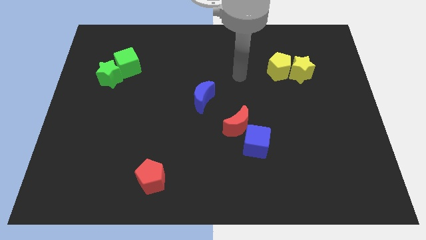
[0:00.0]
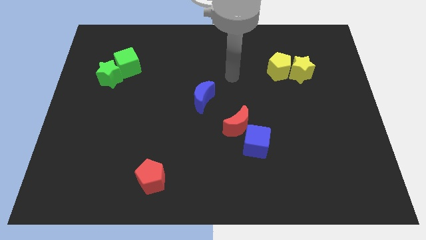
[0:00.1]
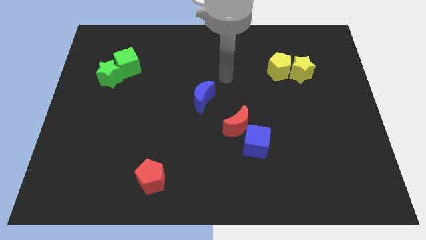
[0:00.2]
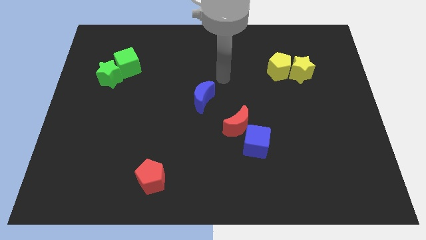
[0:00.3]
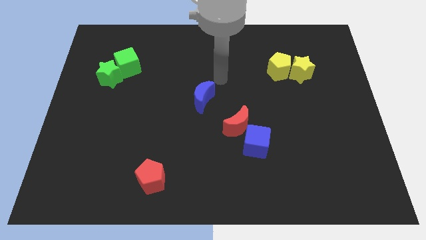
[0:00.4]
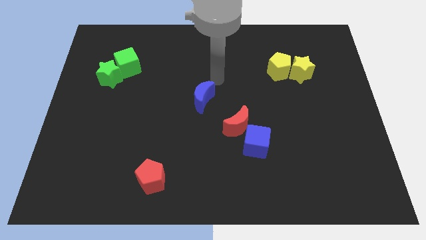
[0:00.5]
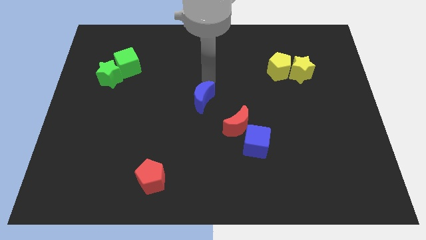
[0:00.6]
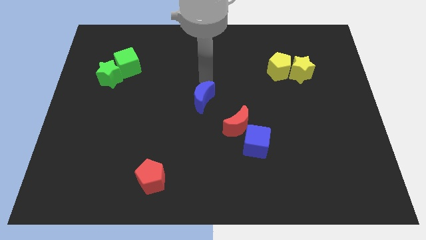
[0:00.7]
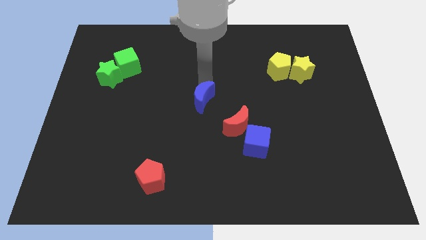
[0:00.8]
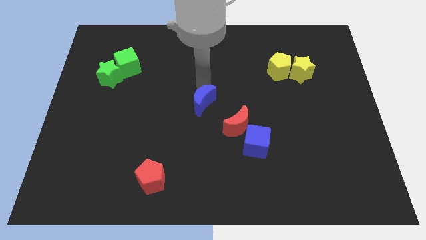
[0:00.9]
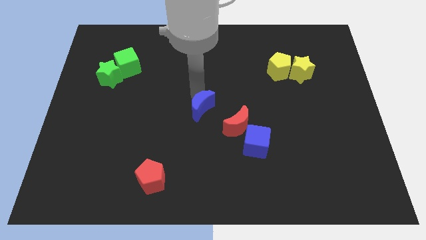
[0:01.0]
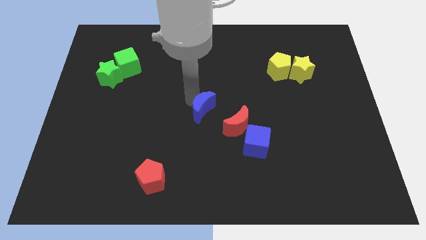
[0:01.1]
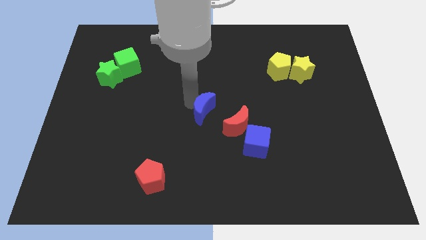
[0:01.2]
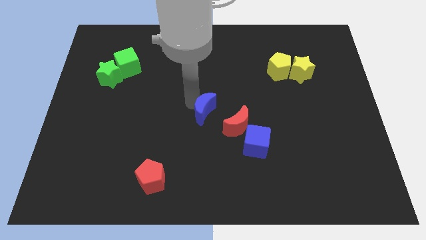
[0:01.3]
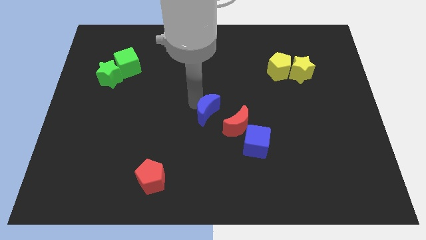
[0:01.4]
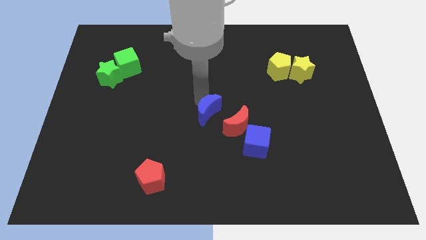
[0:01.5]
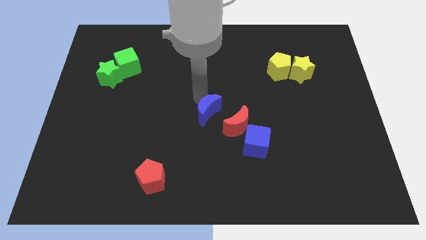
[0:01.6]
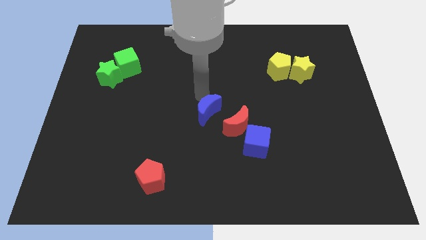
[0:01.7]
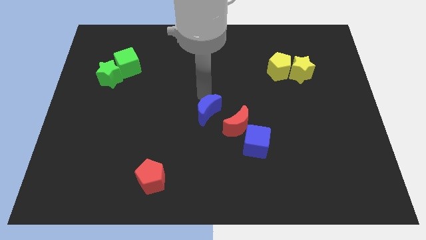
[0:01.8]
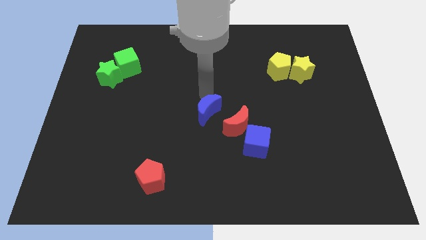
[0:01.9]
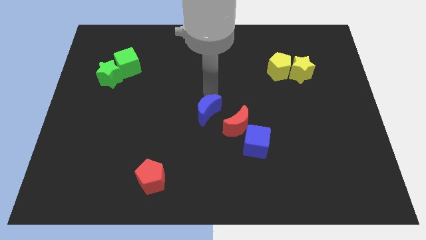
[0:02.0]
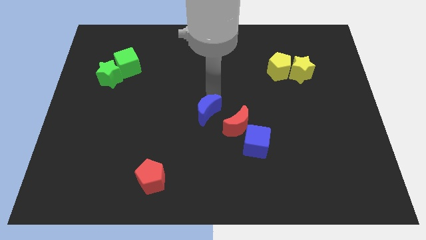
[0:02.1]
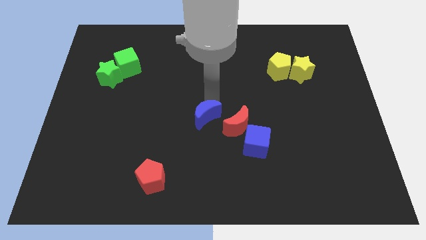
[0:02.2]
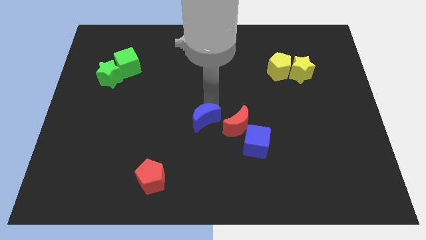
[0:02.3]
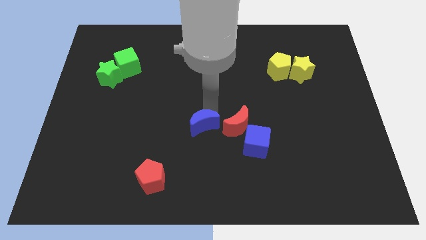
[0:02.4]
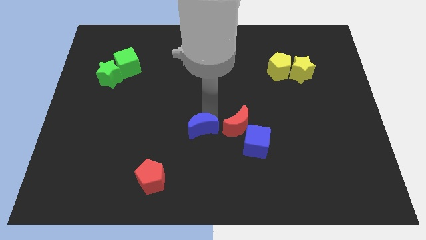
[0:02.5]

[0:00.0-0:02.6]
move the blue crescent towards the bottom left of the red crescent

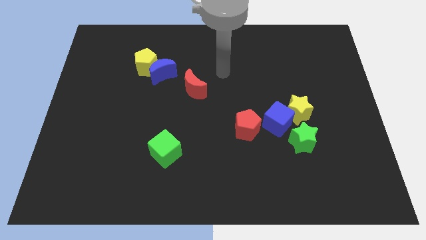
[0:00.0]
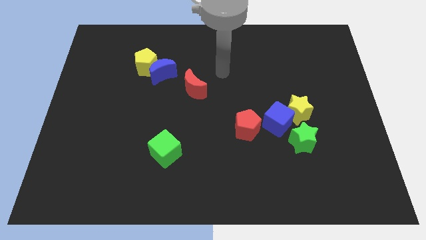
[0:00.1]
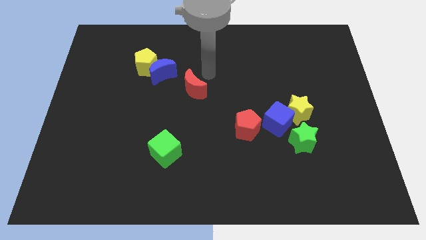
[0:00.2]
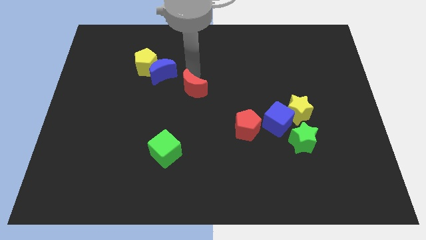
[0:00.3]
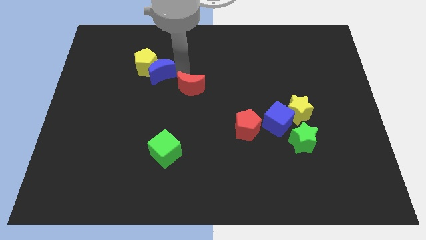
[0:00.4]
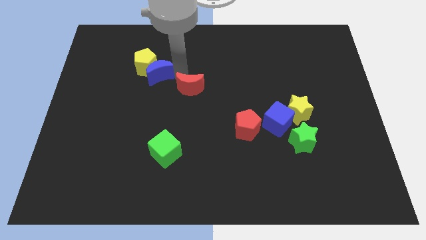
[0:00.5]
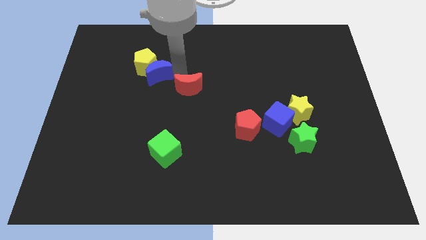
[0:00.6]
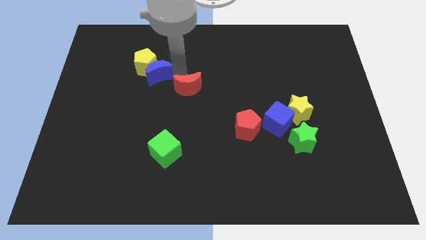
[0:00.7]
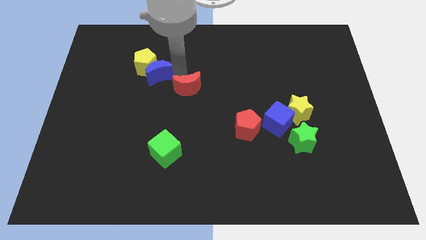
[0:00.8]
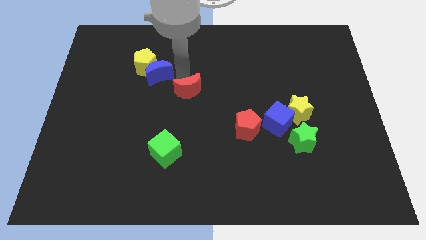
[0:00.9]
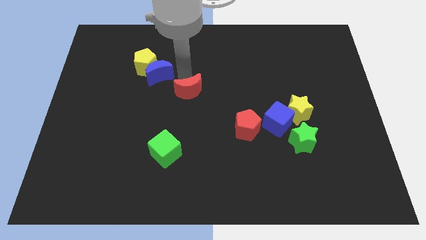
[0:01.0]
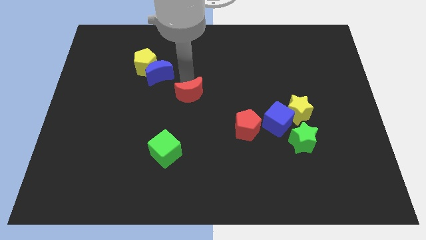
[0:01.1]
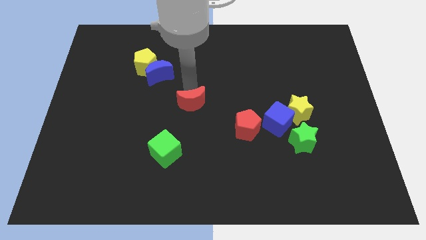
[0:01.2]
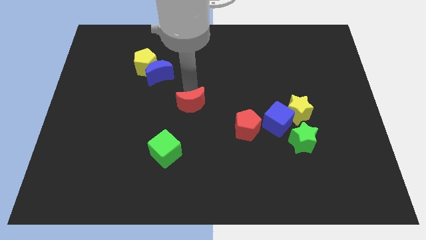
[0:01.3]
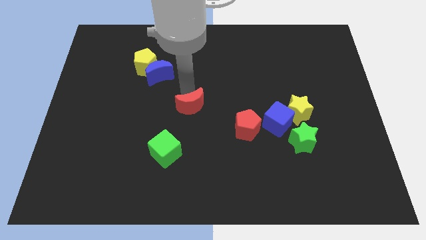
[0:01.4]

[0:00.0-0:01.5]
place the red moon at the center of the board

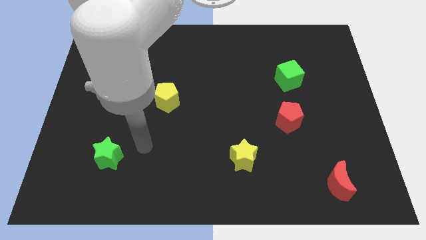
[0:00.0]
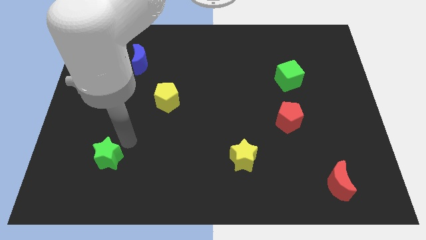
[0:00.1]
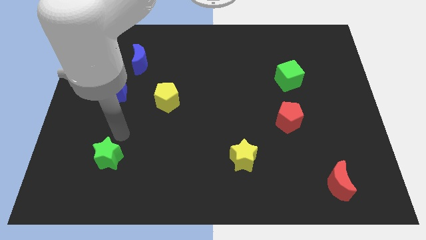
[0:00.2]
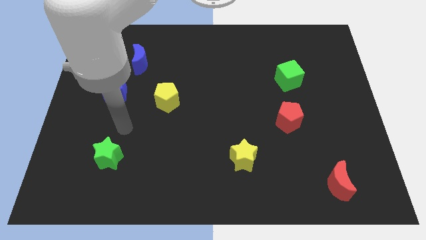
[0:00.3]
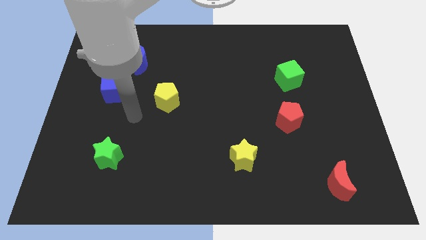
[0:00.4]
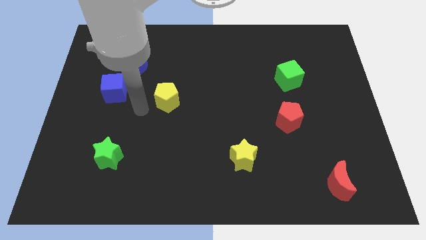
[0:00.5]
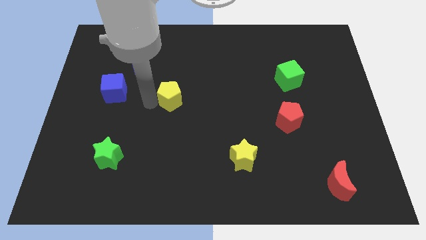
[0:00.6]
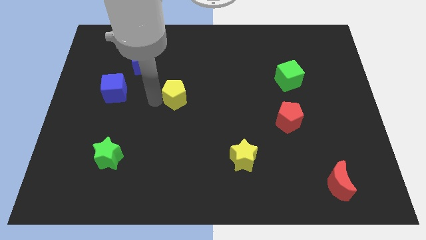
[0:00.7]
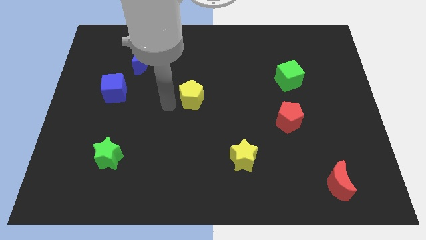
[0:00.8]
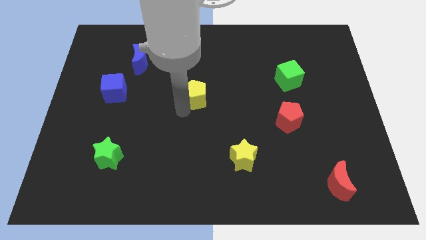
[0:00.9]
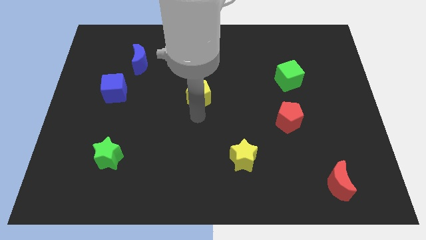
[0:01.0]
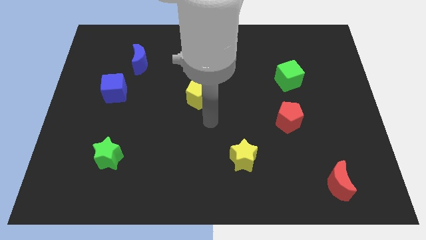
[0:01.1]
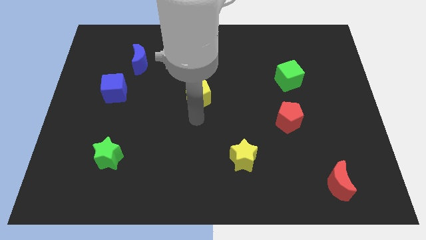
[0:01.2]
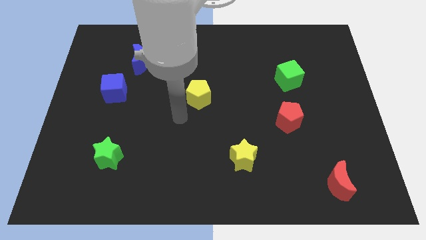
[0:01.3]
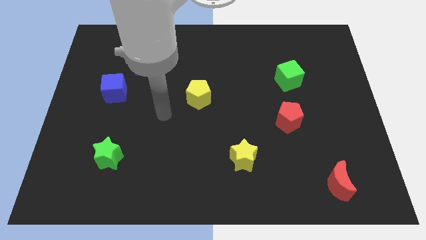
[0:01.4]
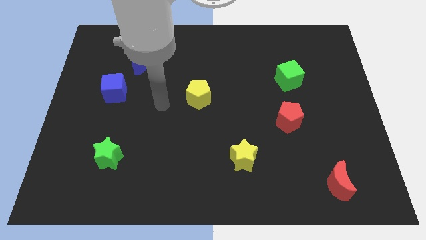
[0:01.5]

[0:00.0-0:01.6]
push the yellow pentagon between green cube and blue cube

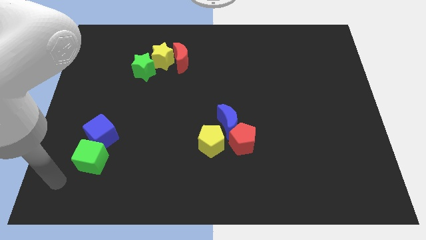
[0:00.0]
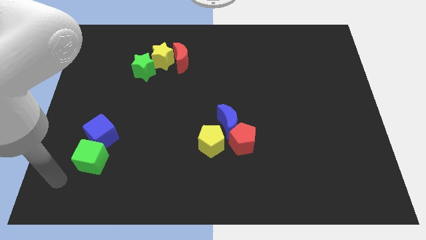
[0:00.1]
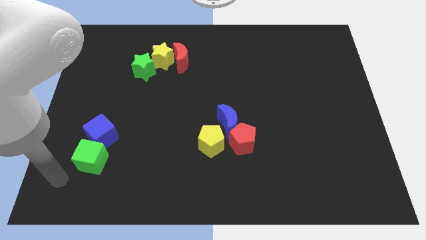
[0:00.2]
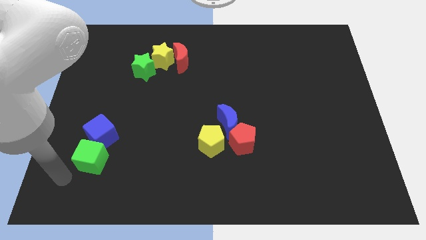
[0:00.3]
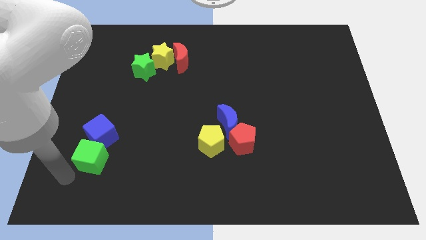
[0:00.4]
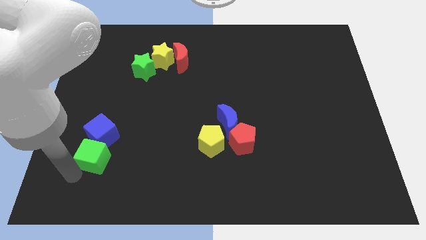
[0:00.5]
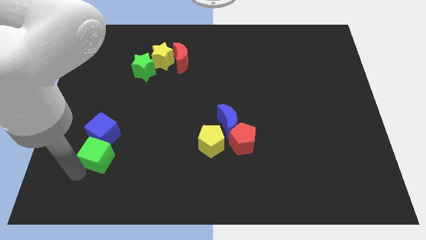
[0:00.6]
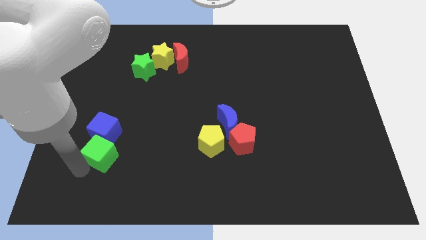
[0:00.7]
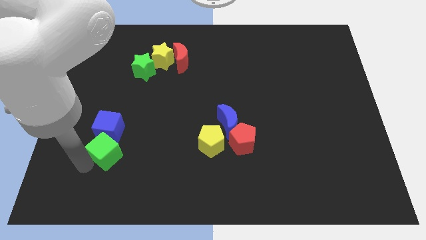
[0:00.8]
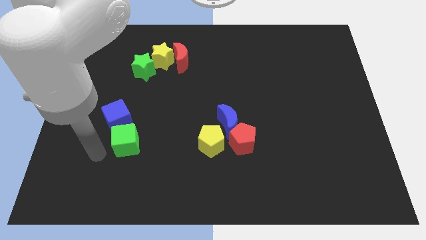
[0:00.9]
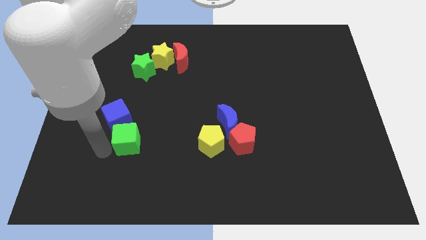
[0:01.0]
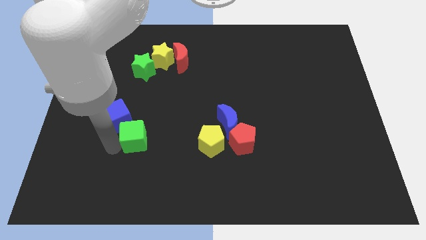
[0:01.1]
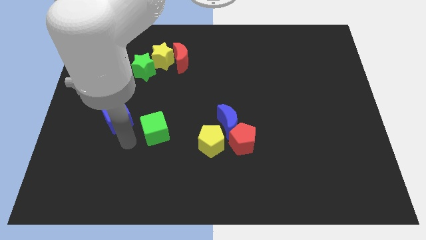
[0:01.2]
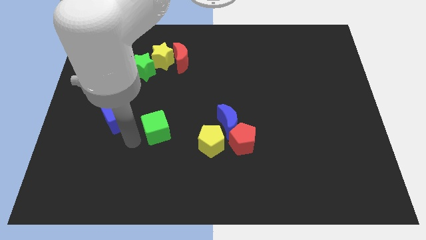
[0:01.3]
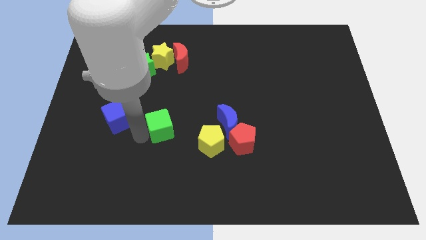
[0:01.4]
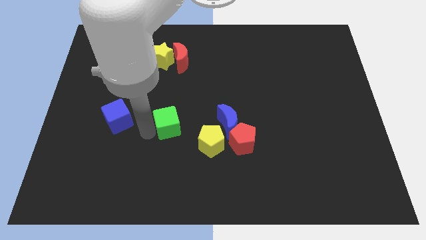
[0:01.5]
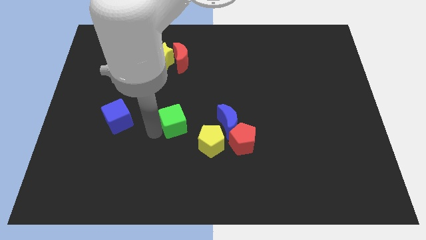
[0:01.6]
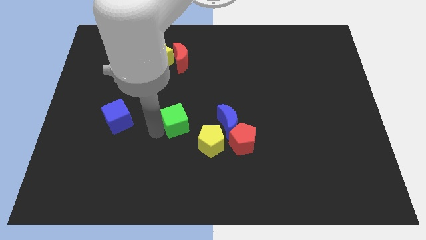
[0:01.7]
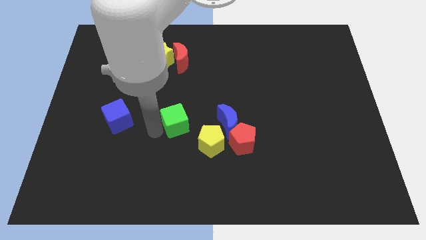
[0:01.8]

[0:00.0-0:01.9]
separate the green cube from the blue cube

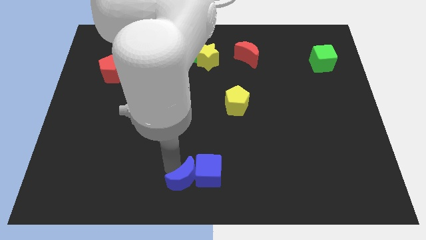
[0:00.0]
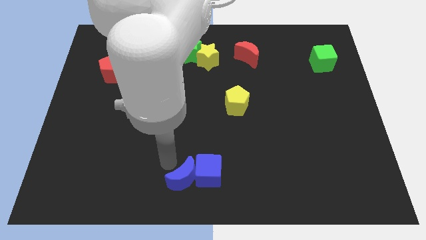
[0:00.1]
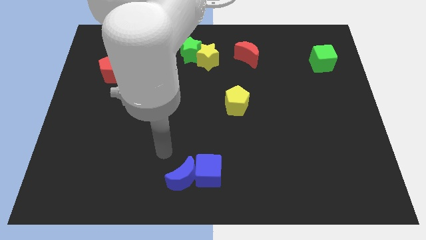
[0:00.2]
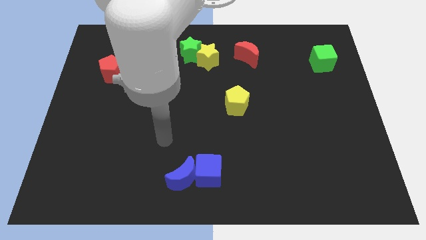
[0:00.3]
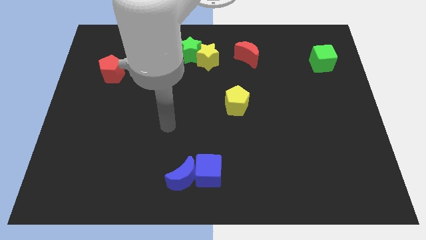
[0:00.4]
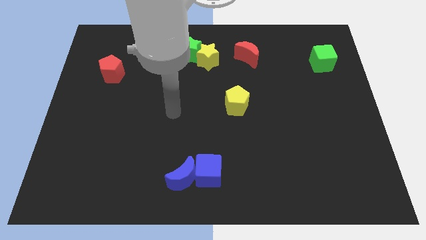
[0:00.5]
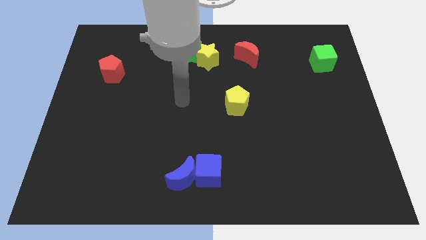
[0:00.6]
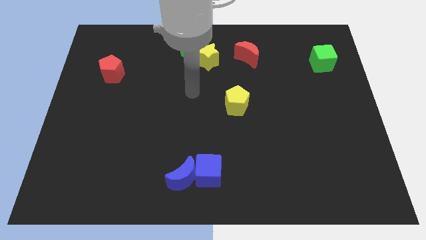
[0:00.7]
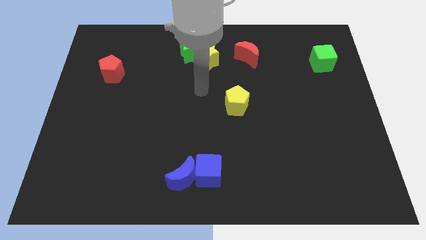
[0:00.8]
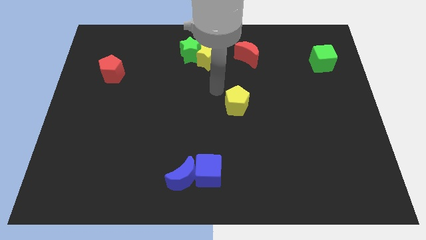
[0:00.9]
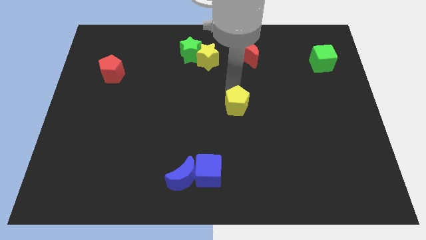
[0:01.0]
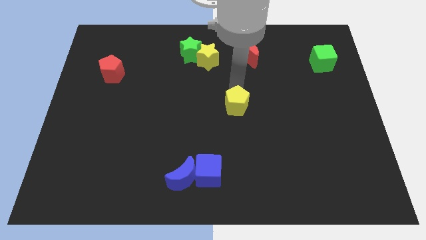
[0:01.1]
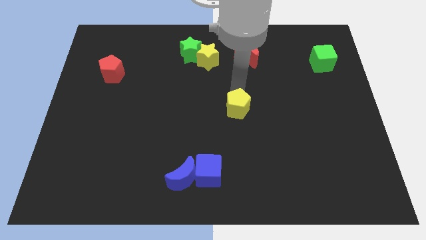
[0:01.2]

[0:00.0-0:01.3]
place your arm at the top of yellow pentagon
